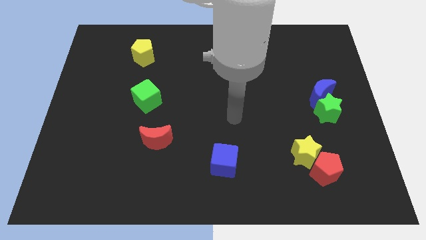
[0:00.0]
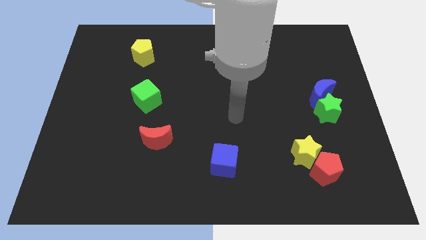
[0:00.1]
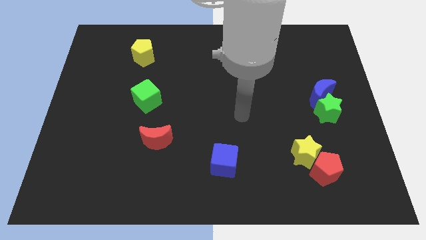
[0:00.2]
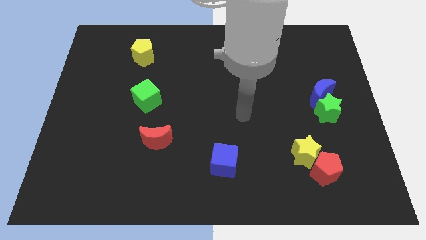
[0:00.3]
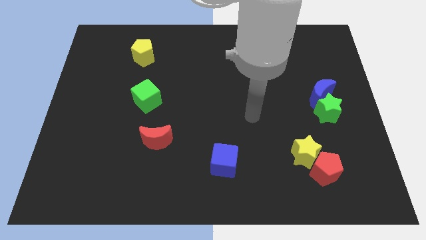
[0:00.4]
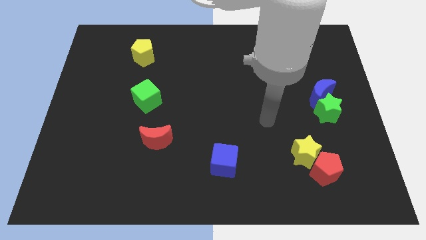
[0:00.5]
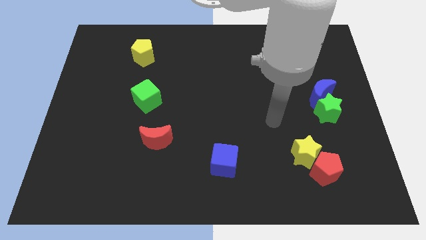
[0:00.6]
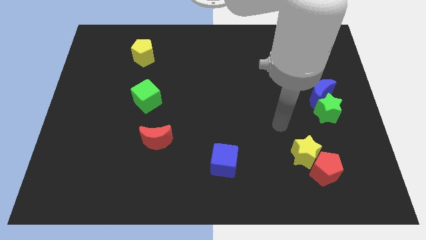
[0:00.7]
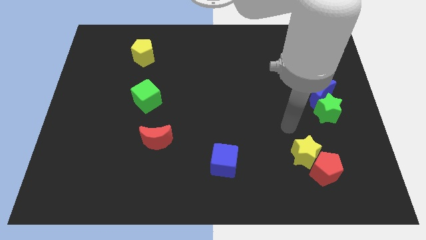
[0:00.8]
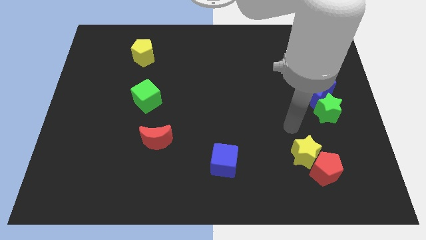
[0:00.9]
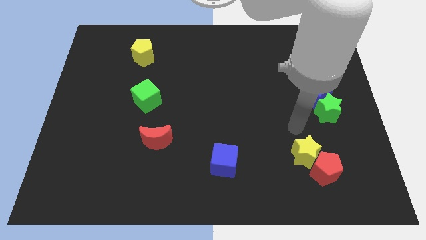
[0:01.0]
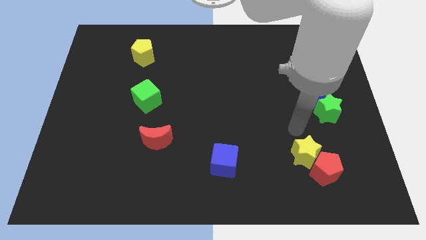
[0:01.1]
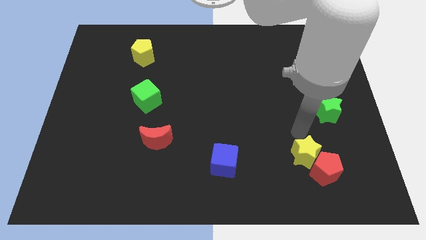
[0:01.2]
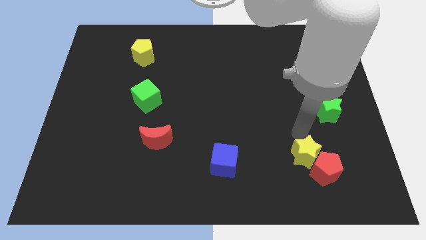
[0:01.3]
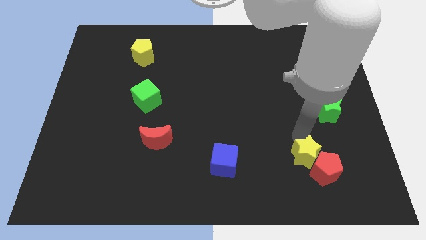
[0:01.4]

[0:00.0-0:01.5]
place the arm near the yellow star

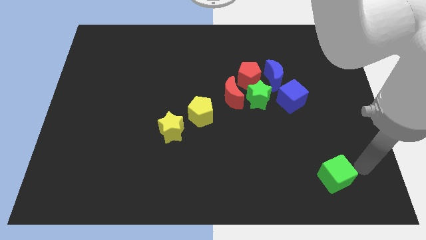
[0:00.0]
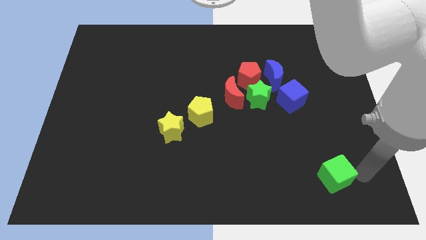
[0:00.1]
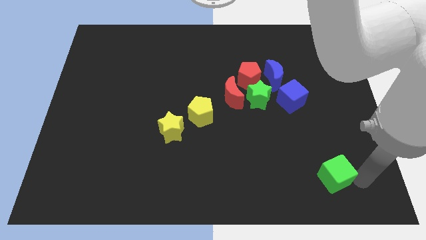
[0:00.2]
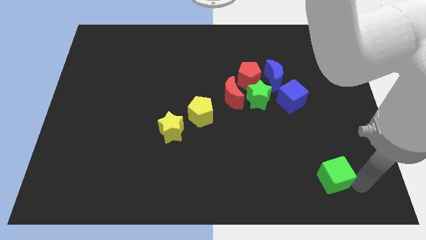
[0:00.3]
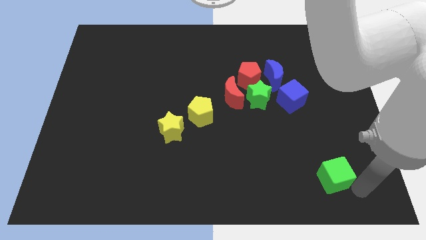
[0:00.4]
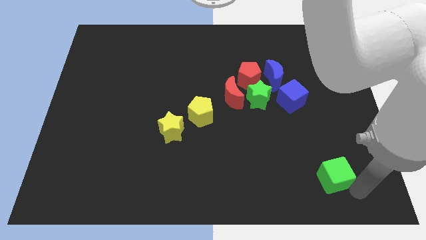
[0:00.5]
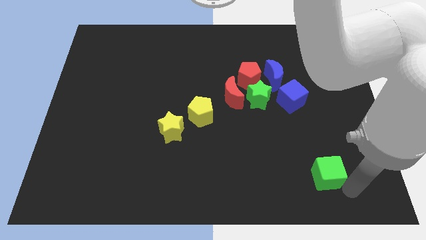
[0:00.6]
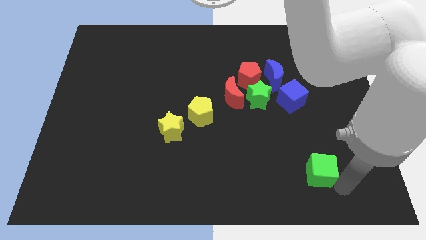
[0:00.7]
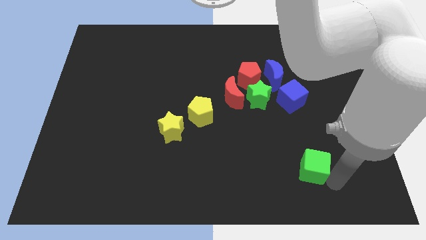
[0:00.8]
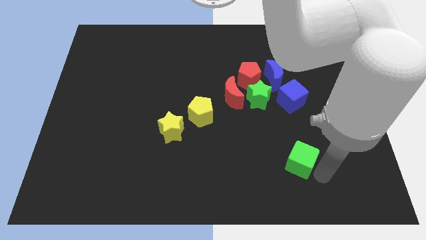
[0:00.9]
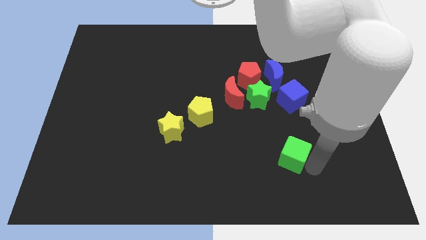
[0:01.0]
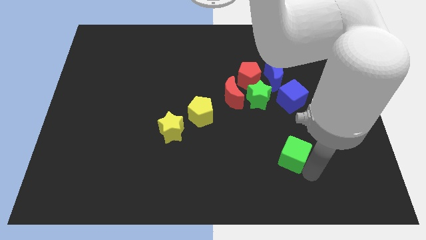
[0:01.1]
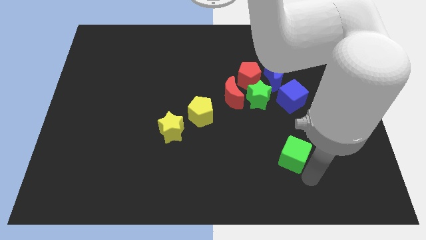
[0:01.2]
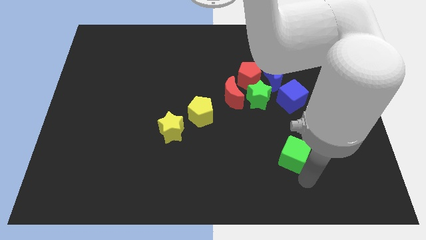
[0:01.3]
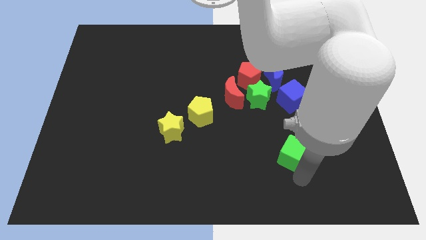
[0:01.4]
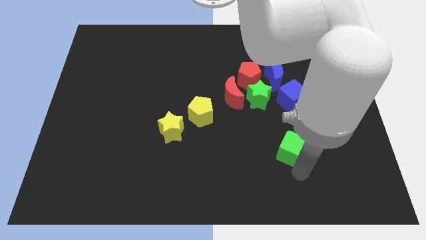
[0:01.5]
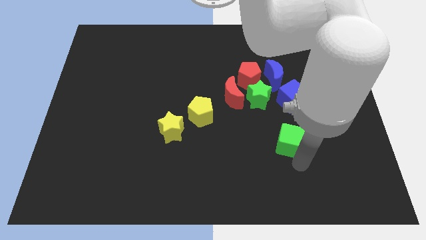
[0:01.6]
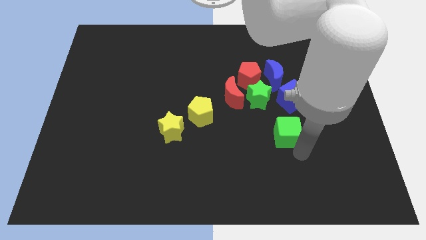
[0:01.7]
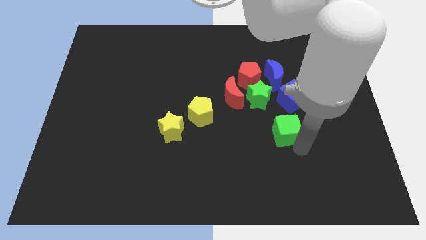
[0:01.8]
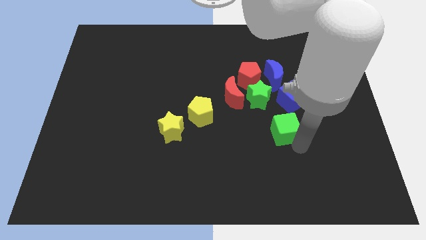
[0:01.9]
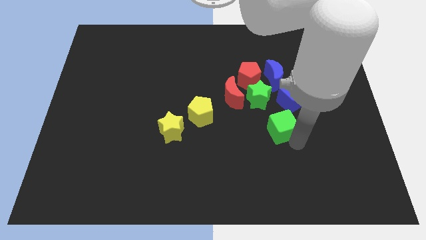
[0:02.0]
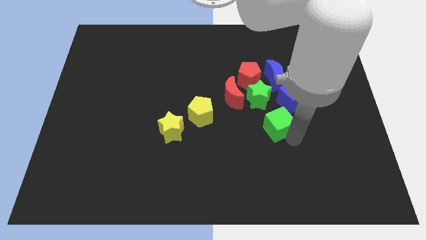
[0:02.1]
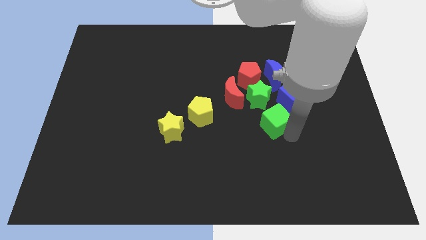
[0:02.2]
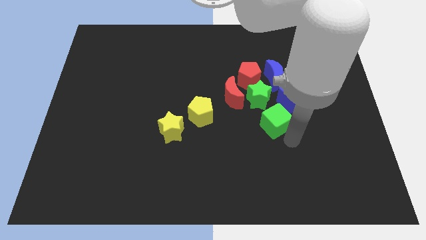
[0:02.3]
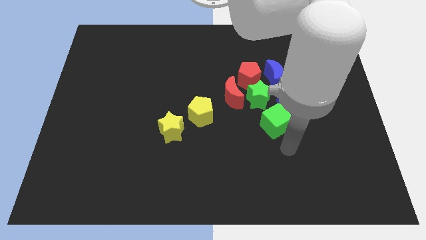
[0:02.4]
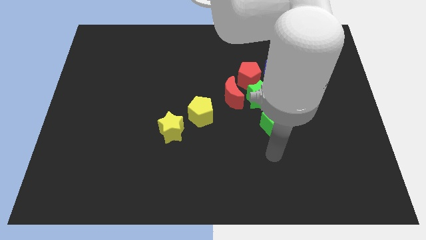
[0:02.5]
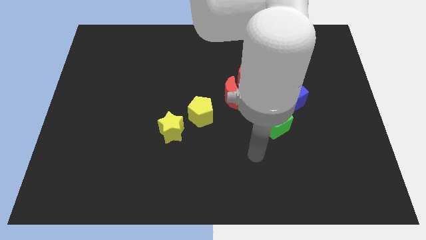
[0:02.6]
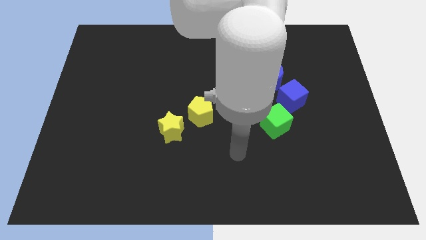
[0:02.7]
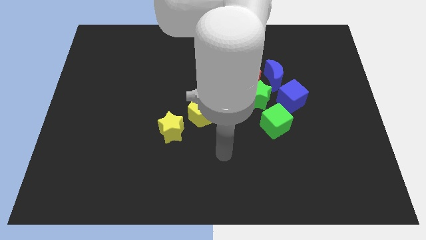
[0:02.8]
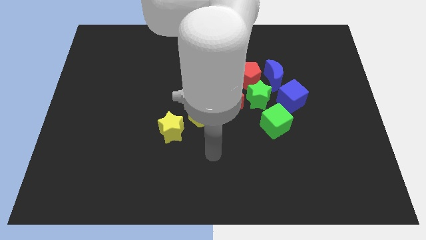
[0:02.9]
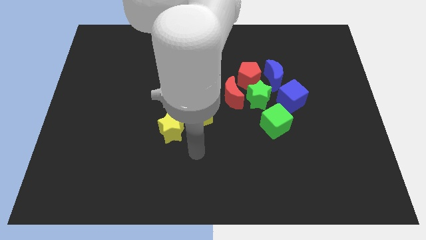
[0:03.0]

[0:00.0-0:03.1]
move the green cube close to the green star

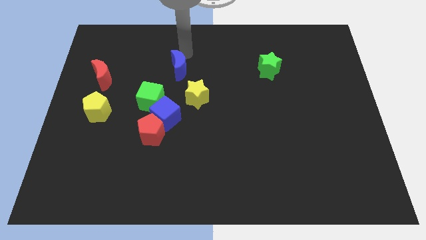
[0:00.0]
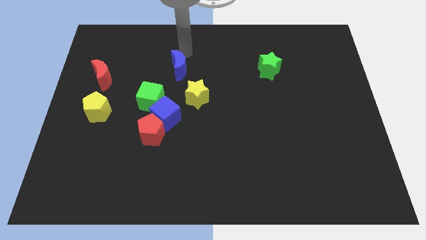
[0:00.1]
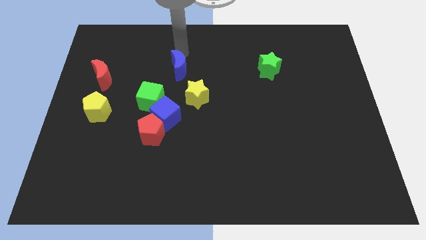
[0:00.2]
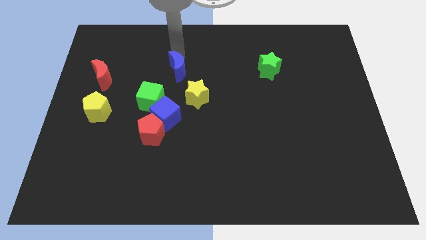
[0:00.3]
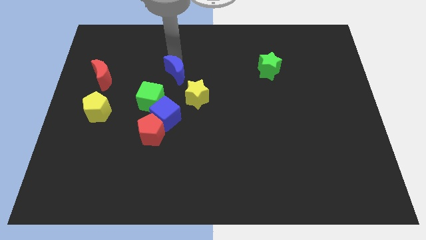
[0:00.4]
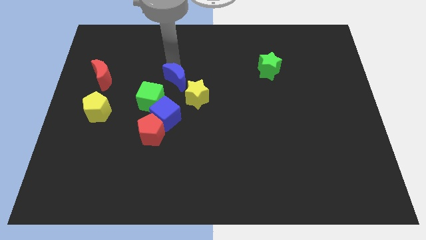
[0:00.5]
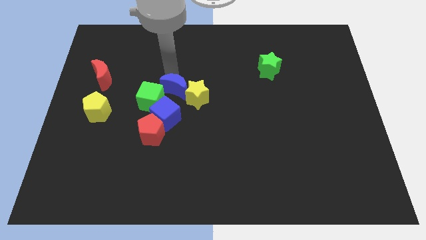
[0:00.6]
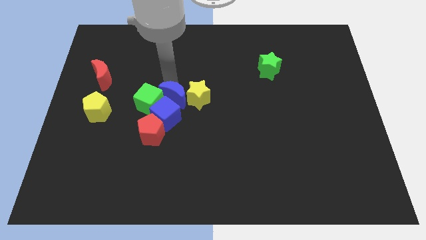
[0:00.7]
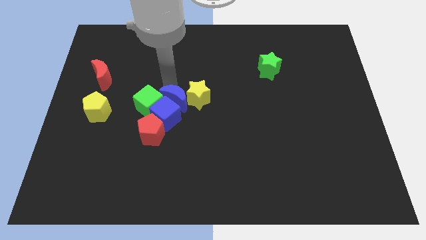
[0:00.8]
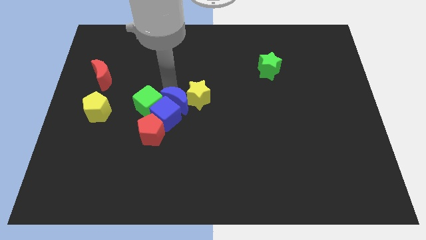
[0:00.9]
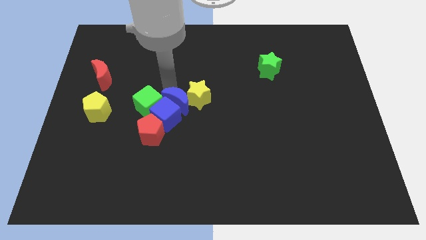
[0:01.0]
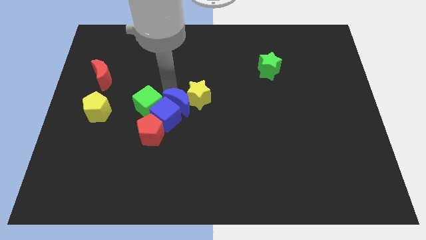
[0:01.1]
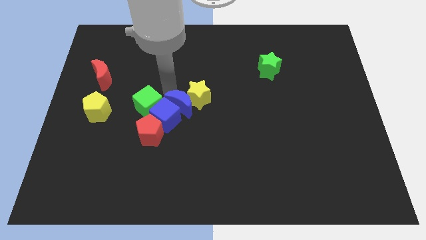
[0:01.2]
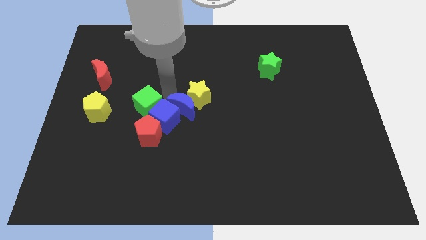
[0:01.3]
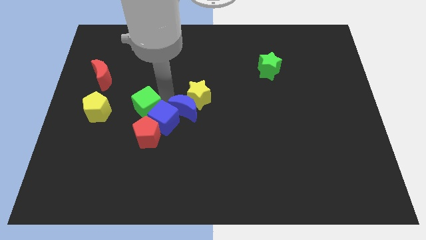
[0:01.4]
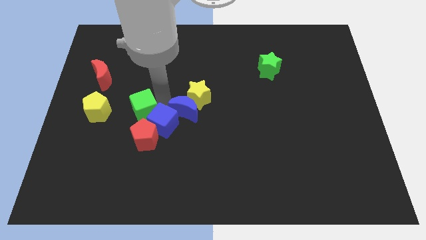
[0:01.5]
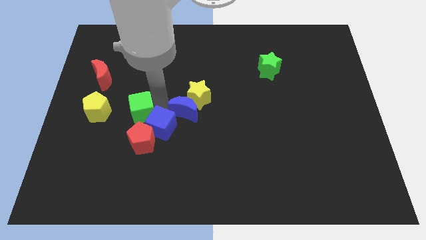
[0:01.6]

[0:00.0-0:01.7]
push the blue moon downwards

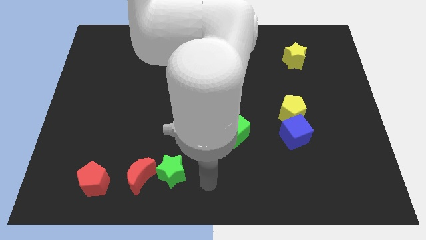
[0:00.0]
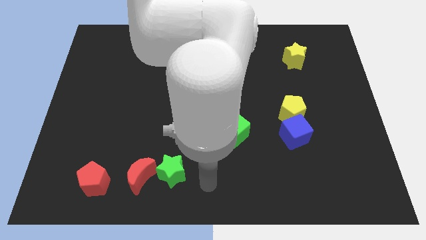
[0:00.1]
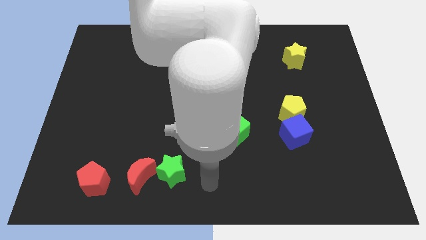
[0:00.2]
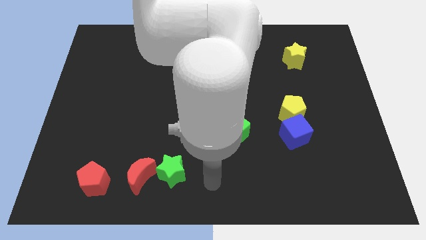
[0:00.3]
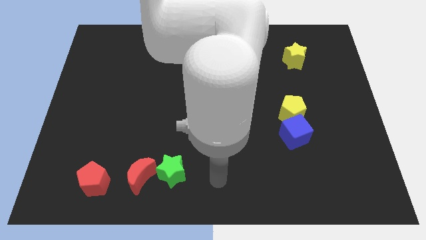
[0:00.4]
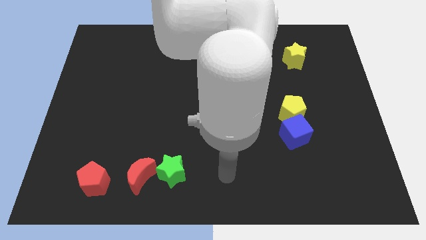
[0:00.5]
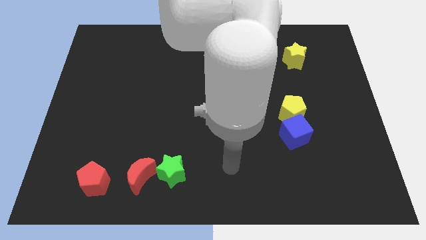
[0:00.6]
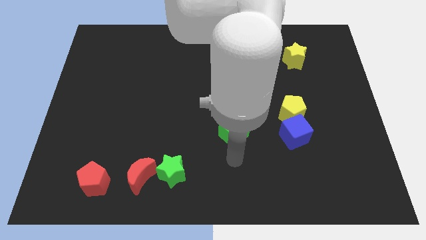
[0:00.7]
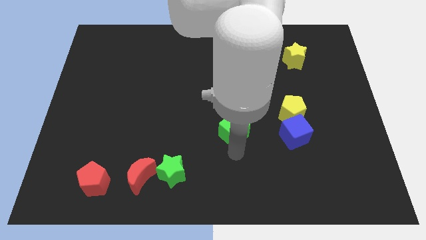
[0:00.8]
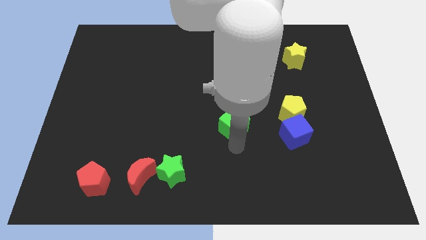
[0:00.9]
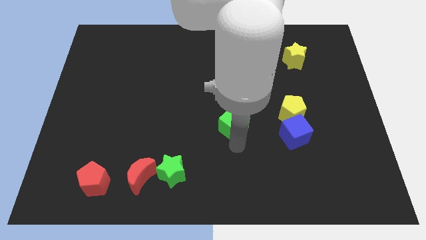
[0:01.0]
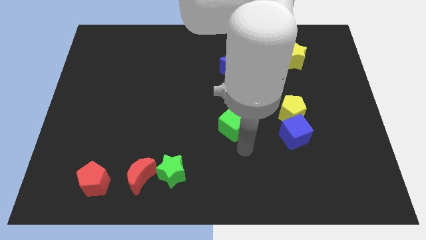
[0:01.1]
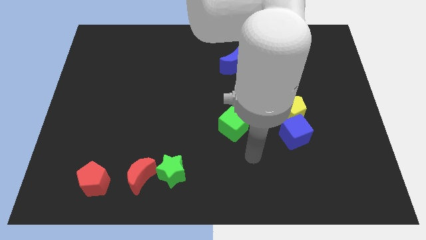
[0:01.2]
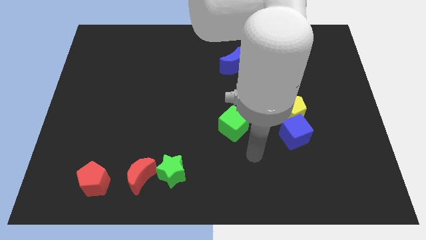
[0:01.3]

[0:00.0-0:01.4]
move the green cube slightly up

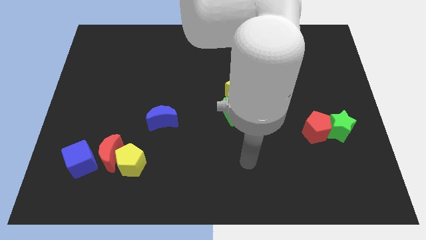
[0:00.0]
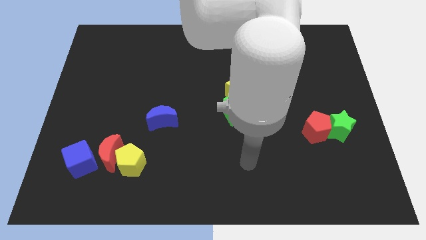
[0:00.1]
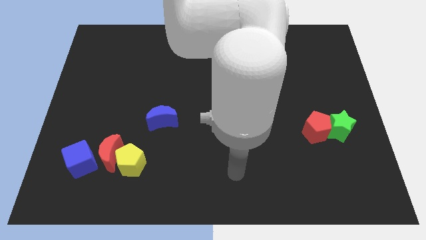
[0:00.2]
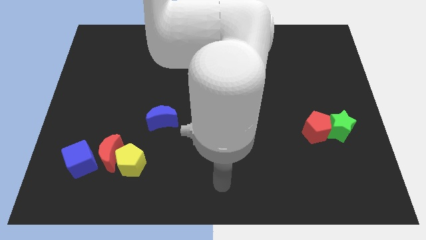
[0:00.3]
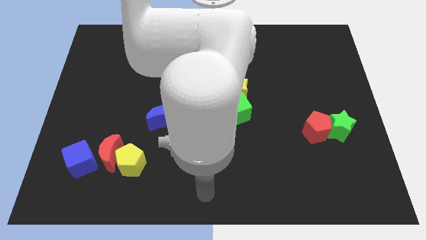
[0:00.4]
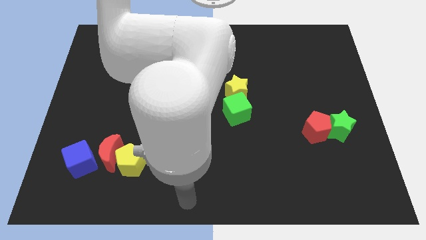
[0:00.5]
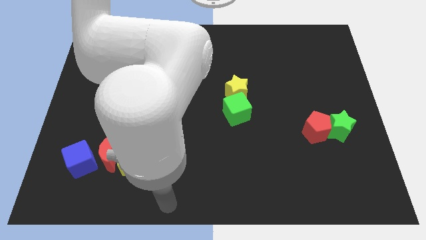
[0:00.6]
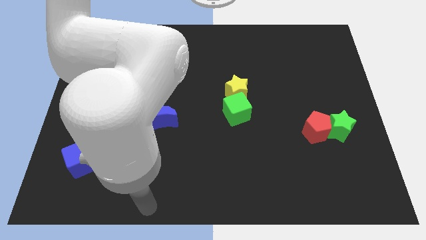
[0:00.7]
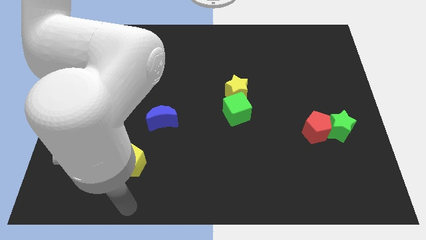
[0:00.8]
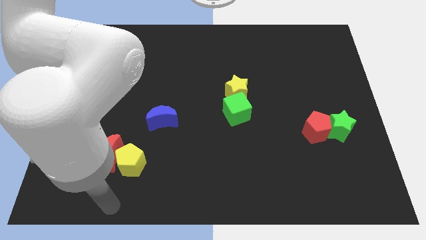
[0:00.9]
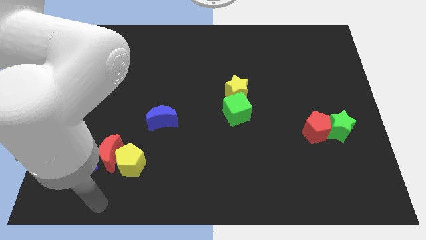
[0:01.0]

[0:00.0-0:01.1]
place your hand below the red moon

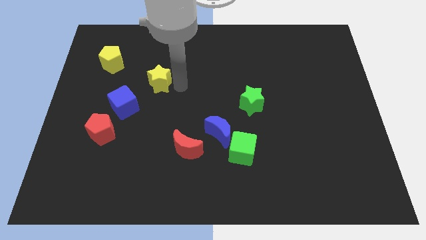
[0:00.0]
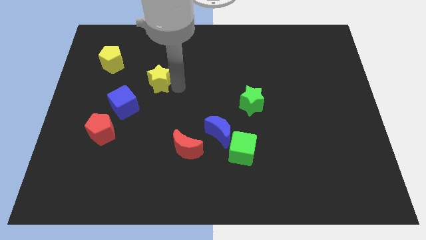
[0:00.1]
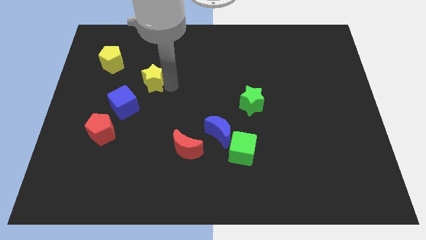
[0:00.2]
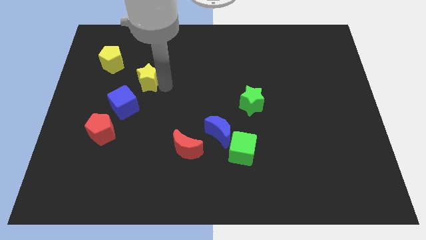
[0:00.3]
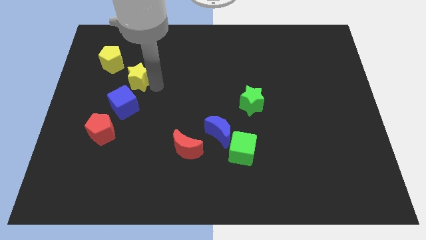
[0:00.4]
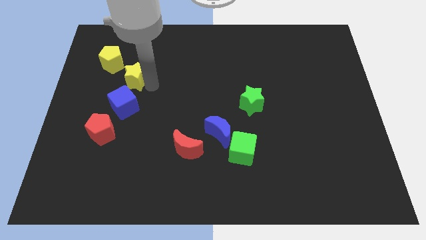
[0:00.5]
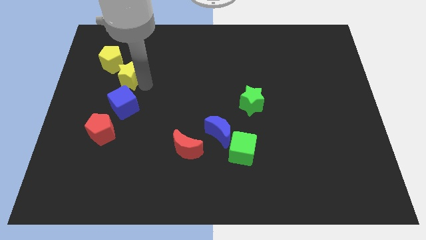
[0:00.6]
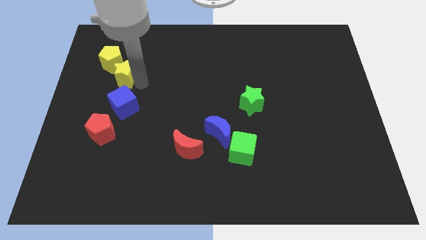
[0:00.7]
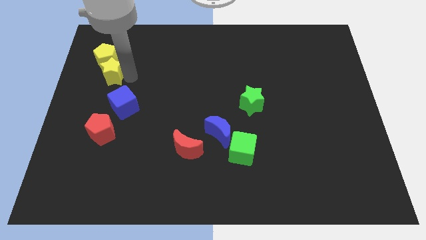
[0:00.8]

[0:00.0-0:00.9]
place the yellow star in between the yellow pentagon and blue cube
